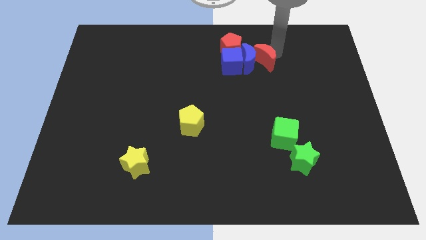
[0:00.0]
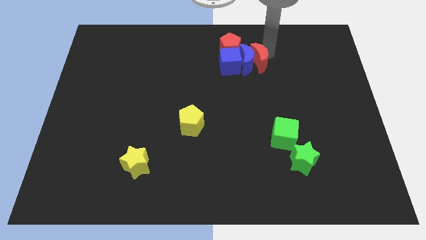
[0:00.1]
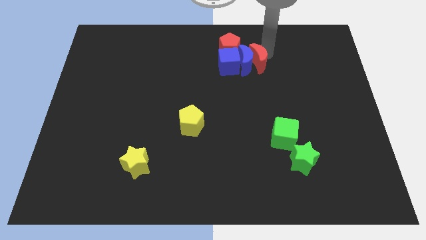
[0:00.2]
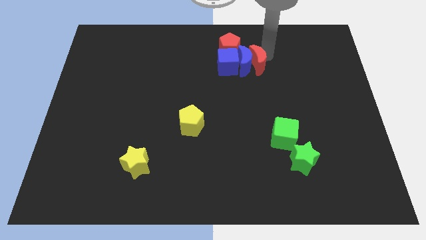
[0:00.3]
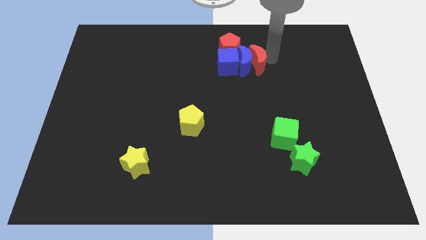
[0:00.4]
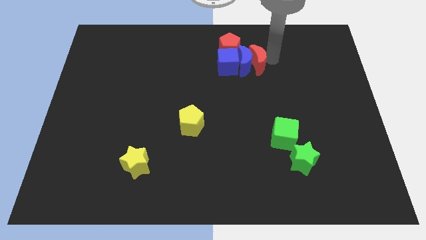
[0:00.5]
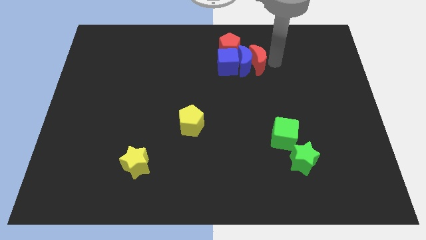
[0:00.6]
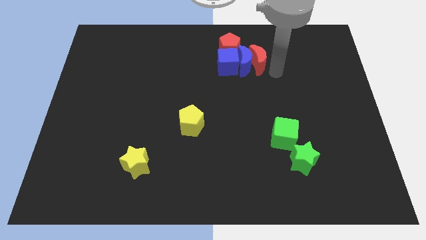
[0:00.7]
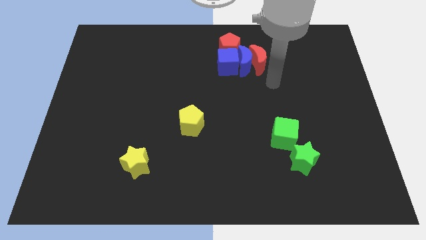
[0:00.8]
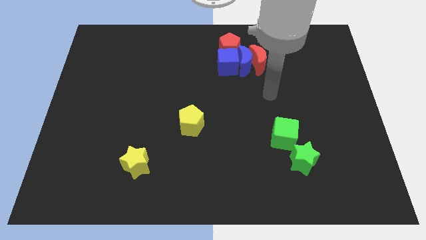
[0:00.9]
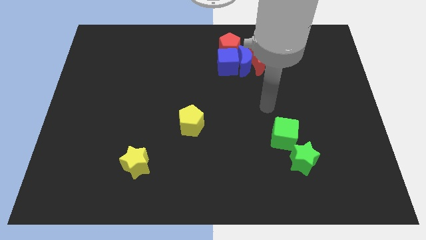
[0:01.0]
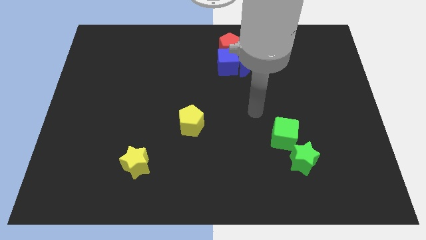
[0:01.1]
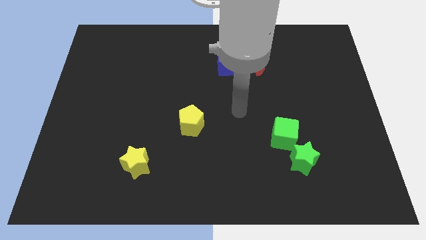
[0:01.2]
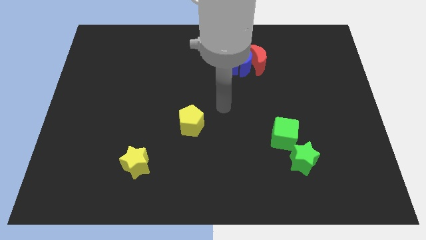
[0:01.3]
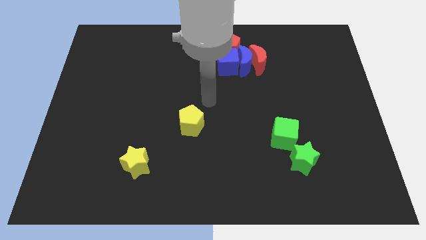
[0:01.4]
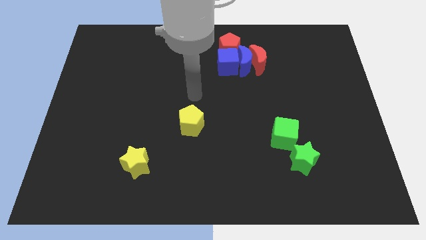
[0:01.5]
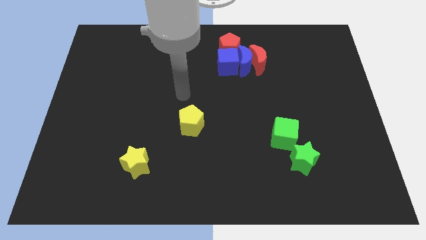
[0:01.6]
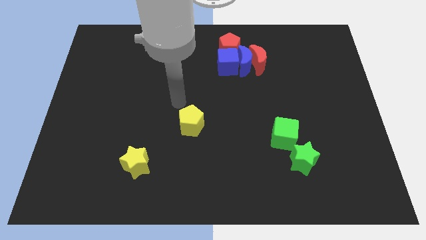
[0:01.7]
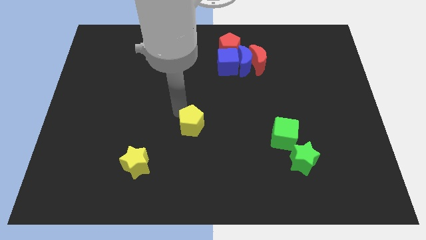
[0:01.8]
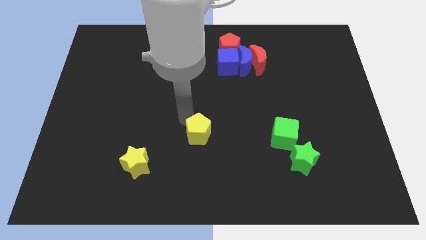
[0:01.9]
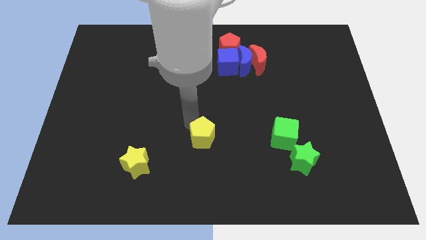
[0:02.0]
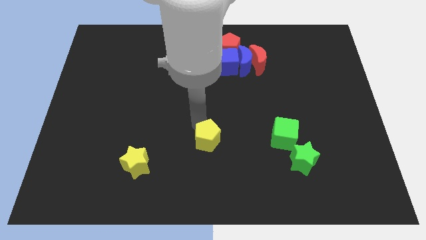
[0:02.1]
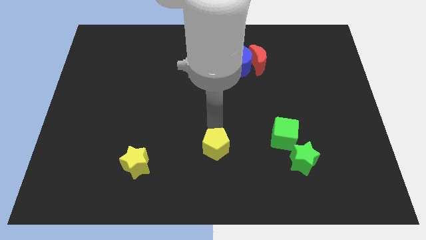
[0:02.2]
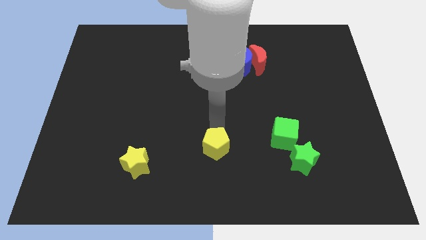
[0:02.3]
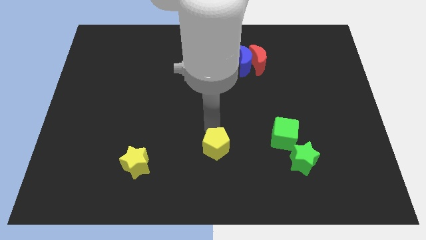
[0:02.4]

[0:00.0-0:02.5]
push the yellow pentagon slightly to the down

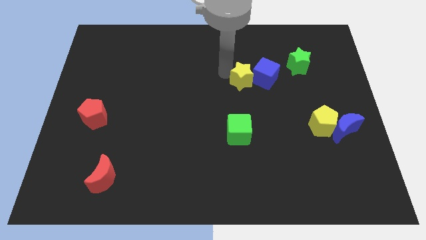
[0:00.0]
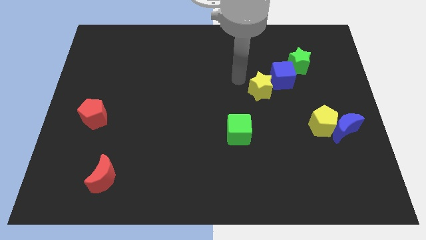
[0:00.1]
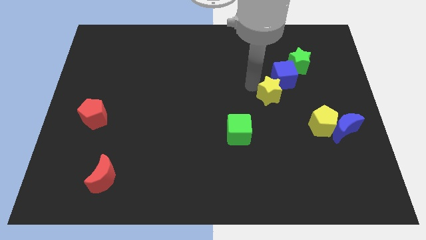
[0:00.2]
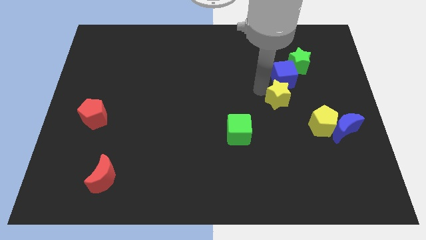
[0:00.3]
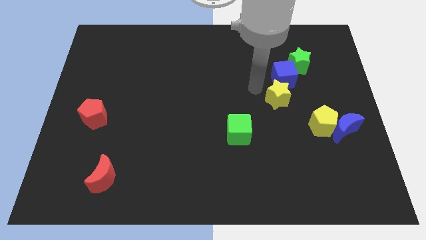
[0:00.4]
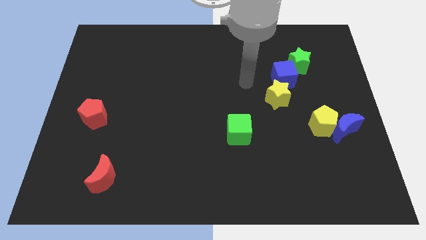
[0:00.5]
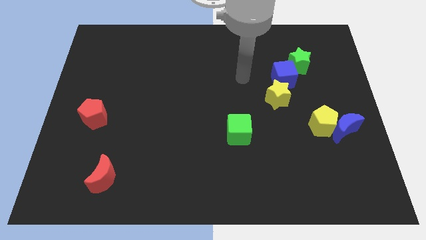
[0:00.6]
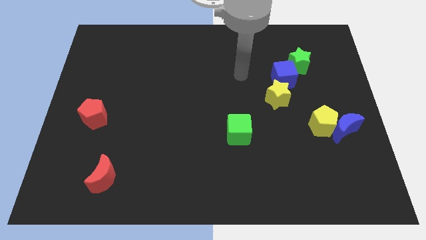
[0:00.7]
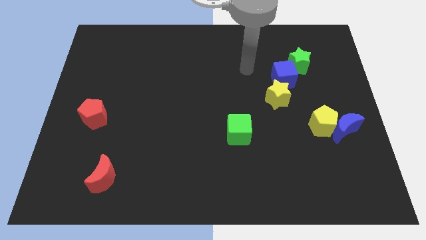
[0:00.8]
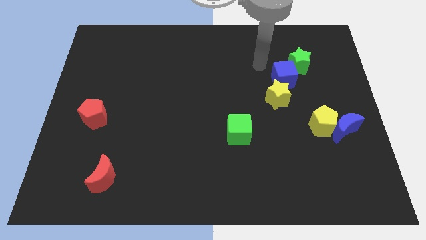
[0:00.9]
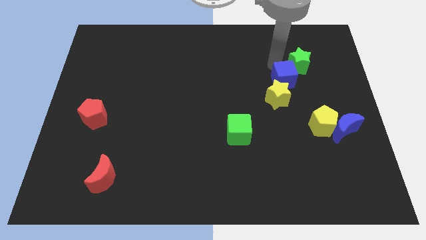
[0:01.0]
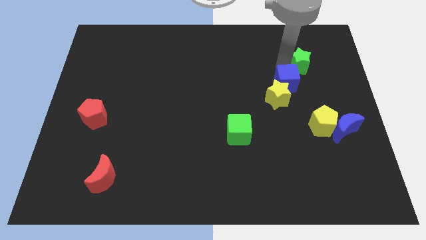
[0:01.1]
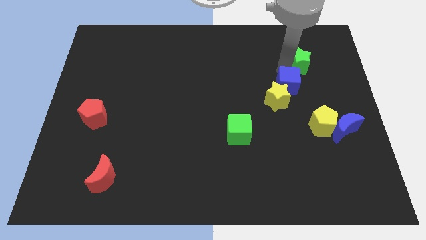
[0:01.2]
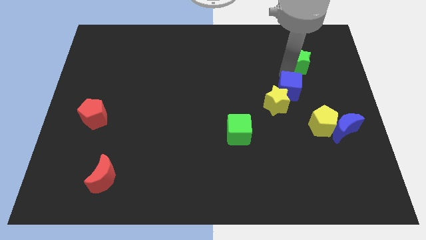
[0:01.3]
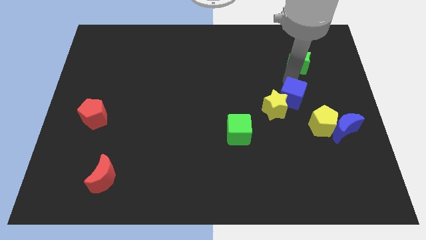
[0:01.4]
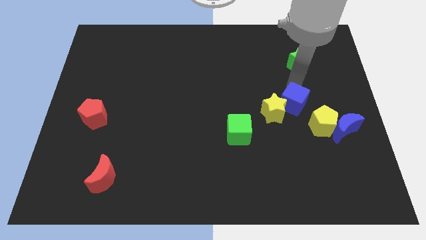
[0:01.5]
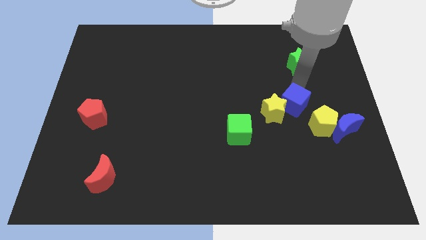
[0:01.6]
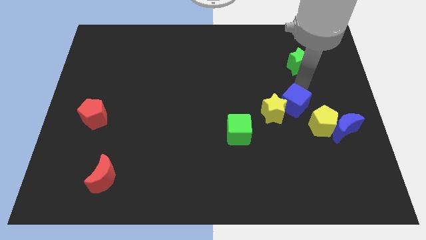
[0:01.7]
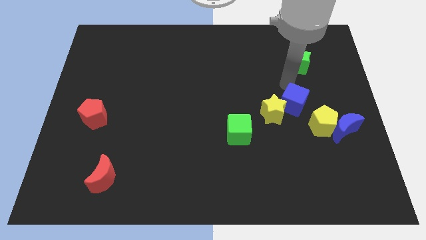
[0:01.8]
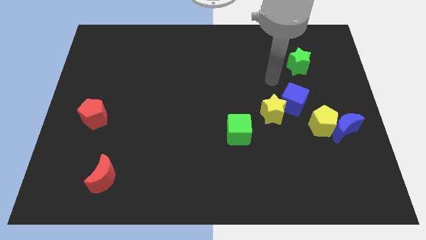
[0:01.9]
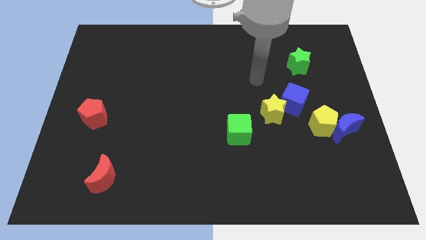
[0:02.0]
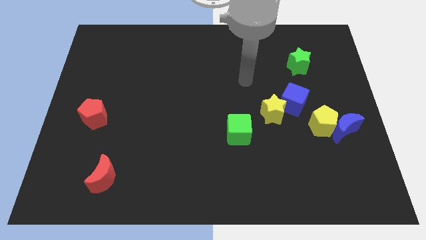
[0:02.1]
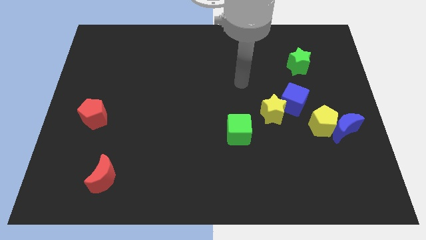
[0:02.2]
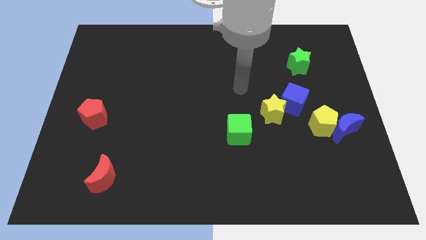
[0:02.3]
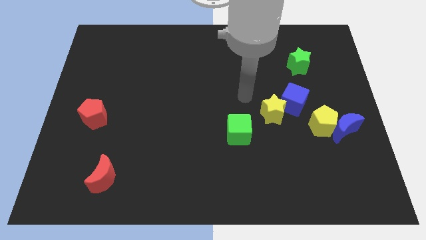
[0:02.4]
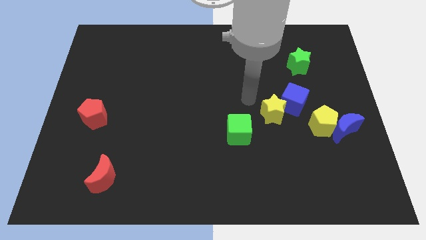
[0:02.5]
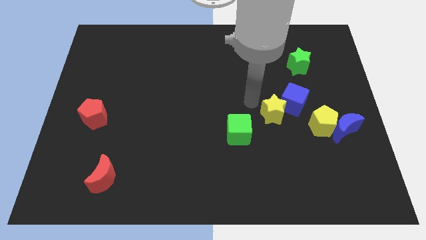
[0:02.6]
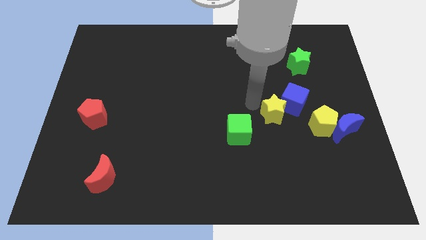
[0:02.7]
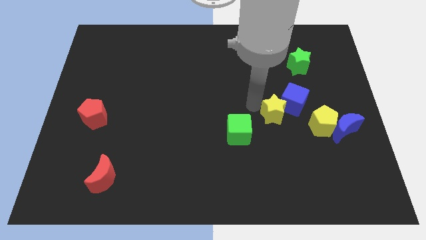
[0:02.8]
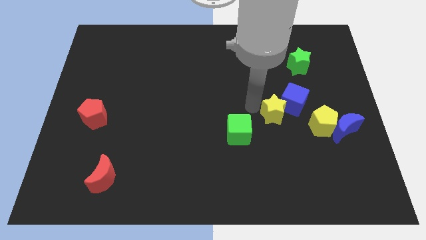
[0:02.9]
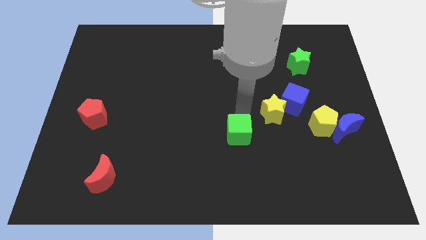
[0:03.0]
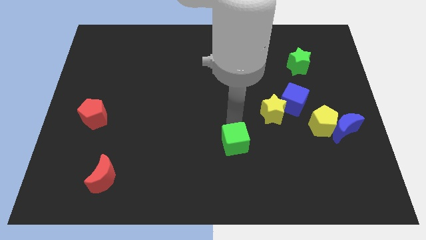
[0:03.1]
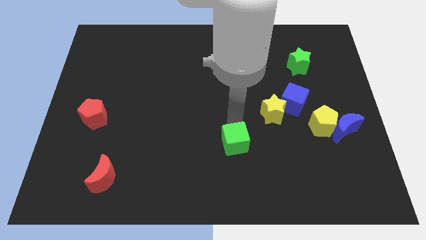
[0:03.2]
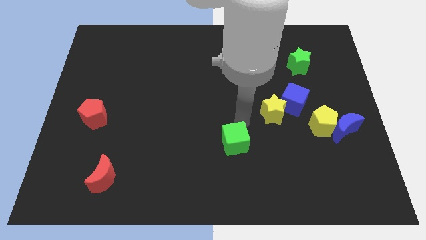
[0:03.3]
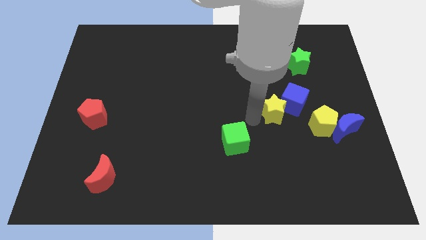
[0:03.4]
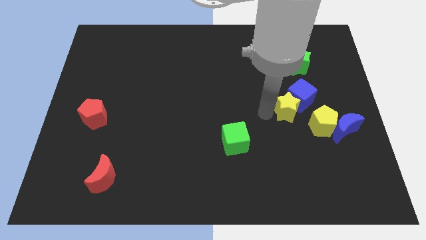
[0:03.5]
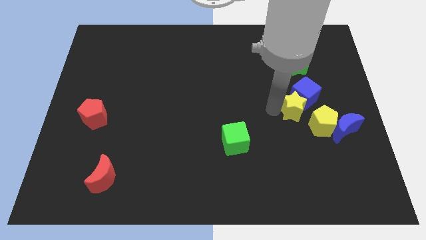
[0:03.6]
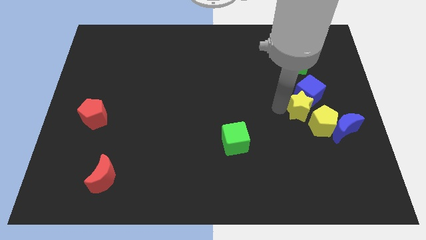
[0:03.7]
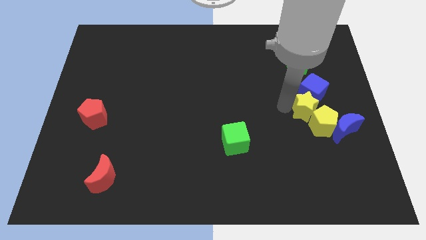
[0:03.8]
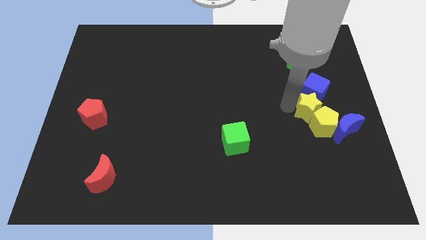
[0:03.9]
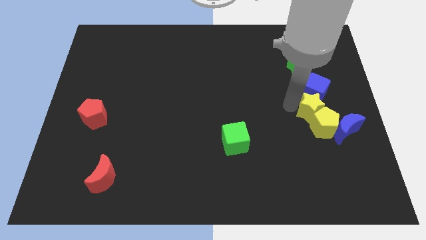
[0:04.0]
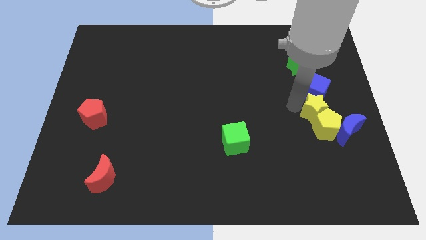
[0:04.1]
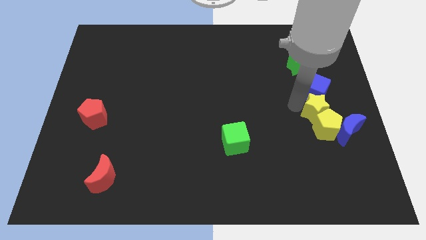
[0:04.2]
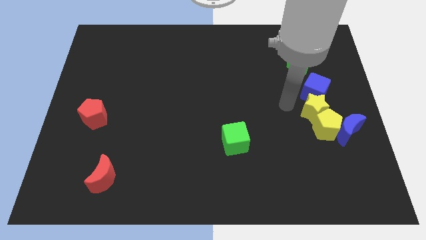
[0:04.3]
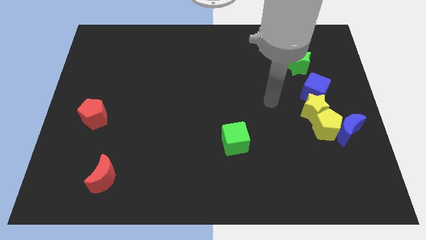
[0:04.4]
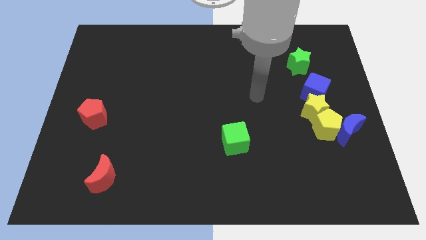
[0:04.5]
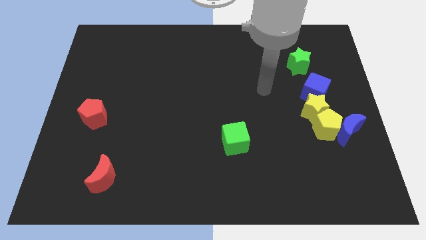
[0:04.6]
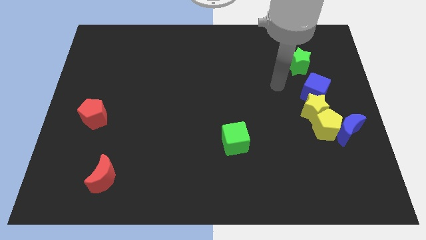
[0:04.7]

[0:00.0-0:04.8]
push the yellow star and blue cube to the center right

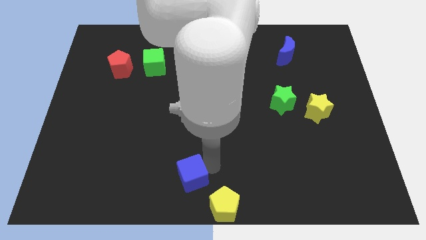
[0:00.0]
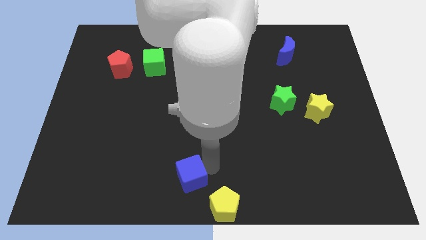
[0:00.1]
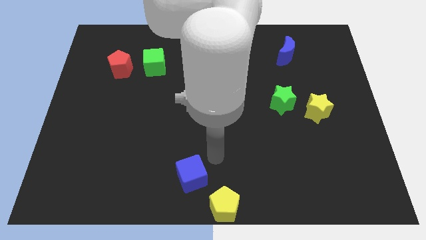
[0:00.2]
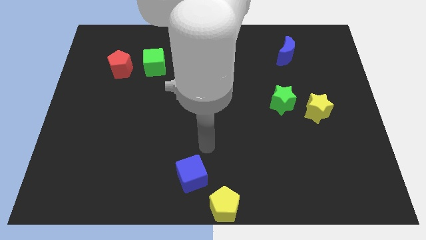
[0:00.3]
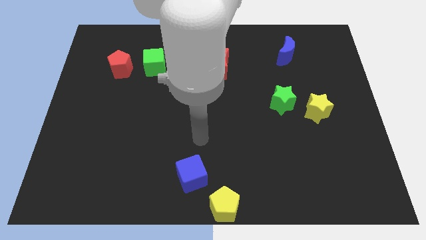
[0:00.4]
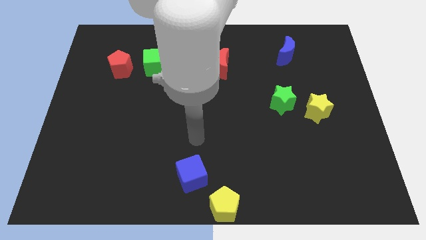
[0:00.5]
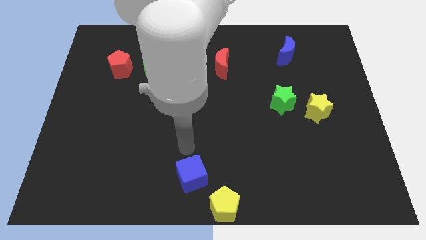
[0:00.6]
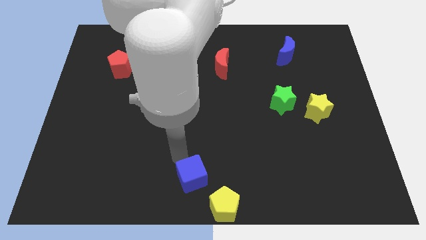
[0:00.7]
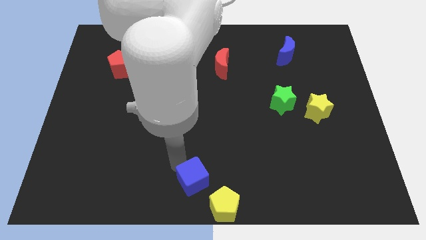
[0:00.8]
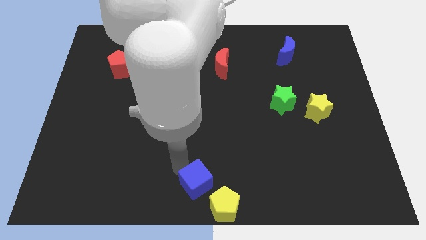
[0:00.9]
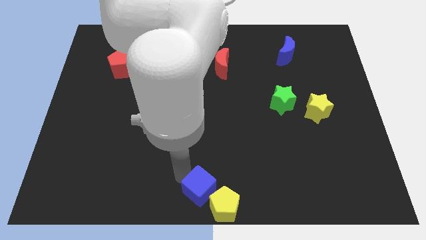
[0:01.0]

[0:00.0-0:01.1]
move blue cube into yellow pentagon

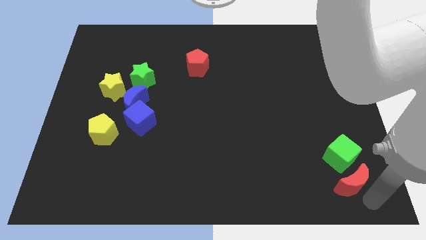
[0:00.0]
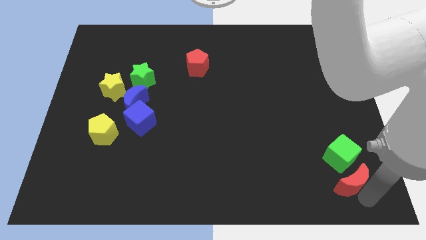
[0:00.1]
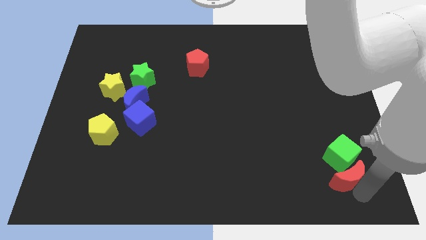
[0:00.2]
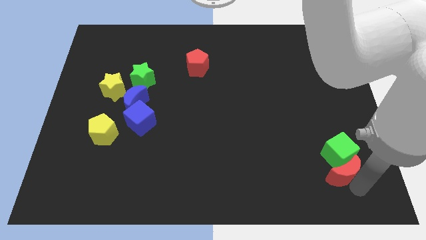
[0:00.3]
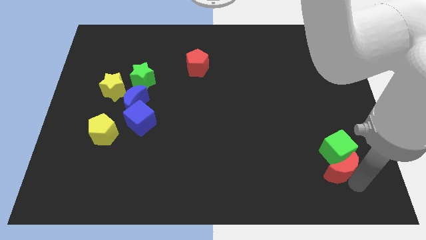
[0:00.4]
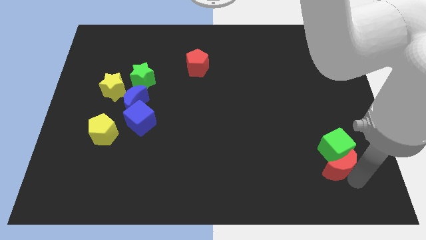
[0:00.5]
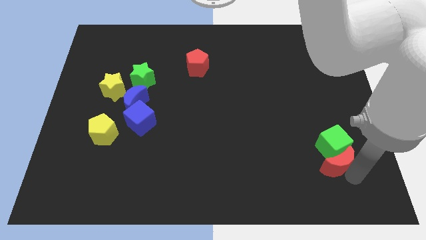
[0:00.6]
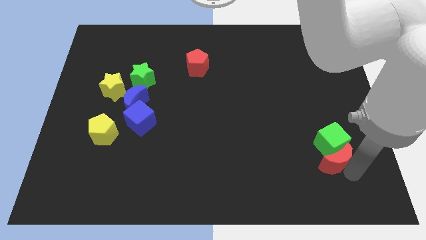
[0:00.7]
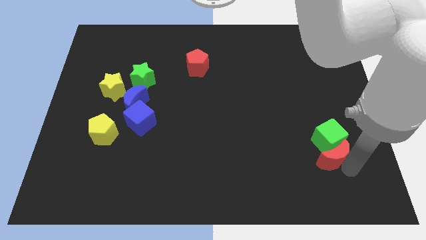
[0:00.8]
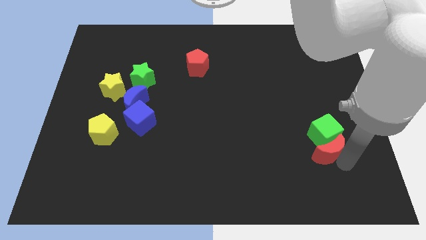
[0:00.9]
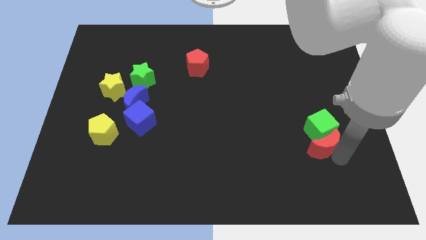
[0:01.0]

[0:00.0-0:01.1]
push red moon into green cube
